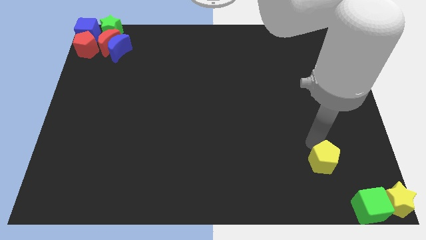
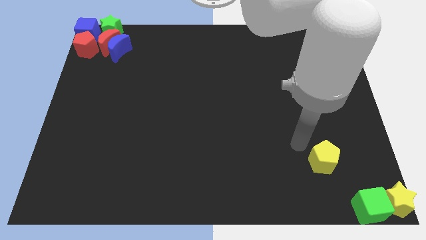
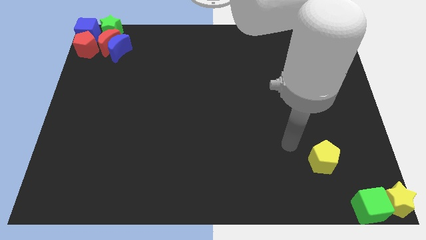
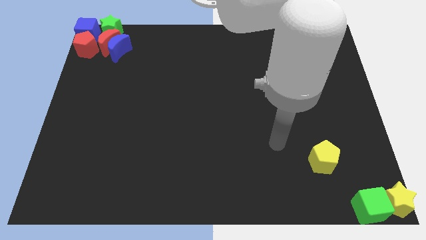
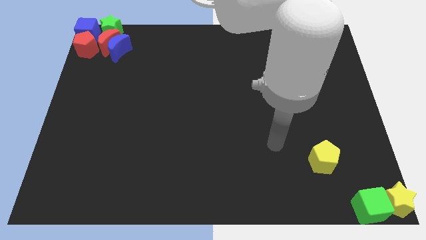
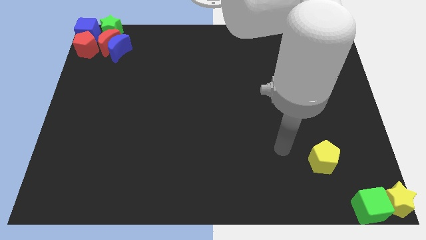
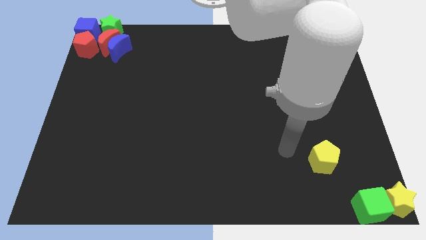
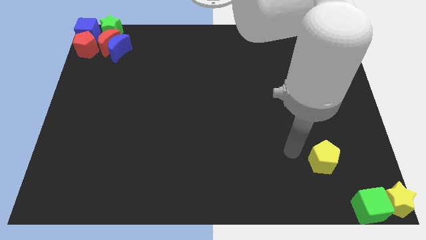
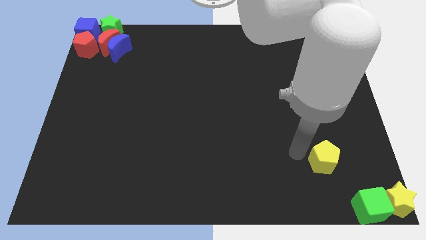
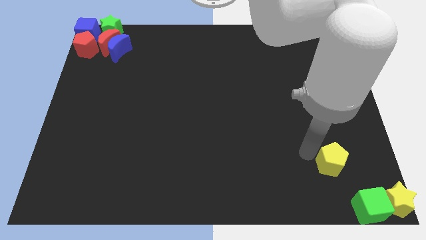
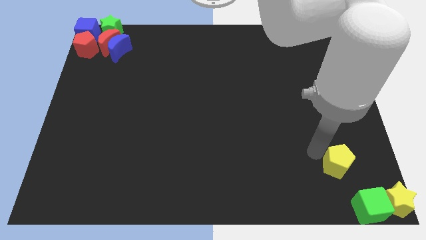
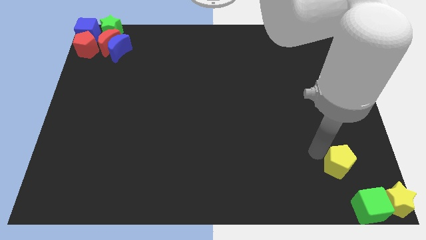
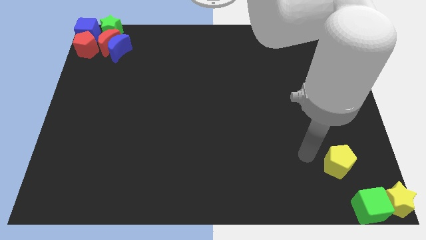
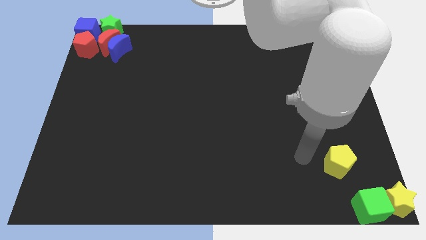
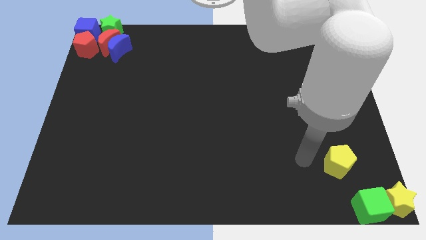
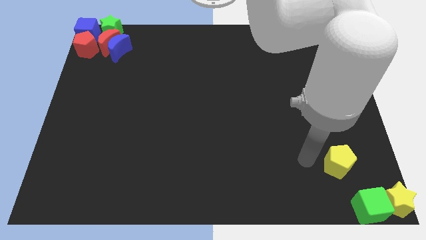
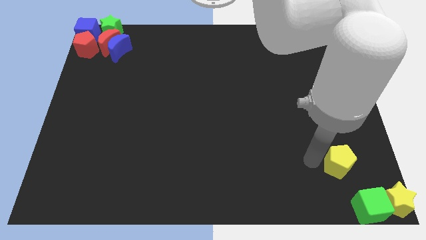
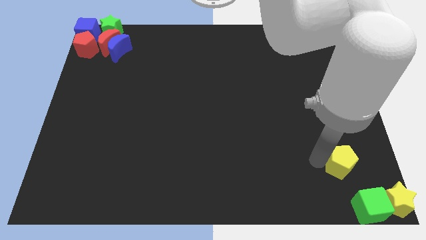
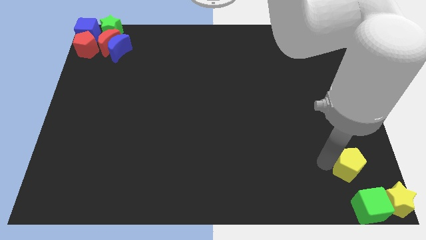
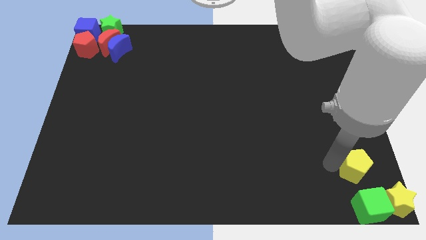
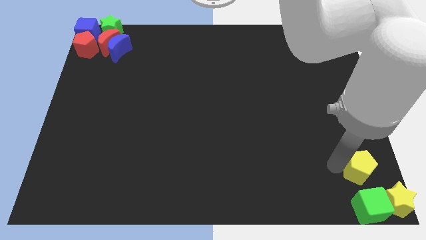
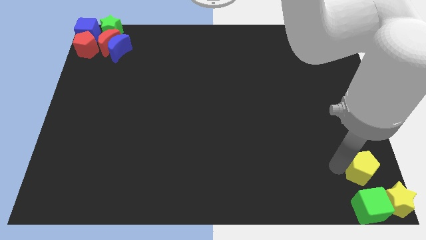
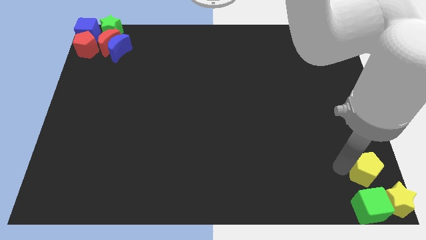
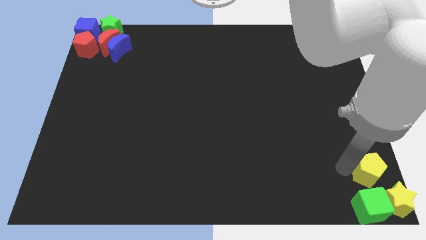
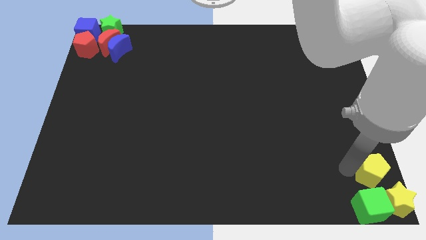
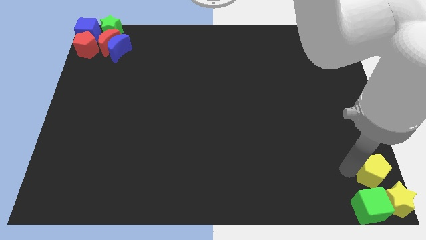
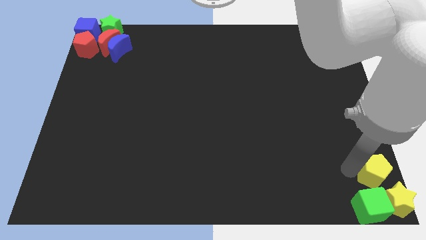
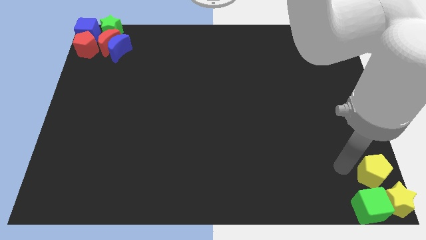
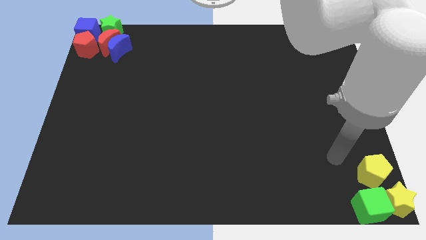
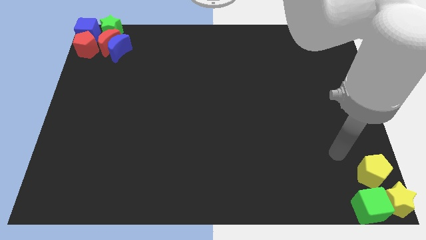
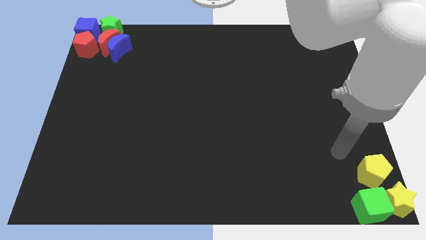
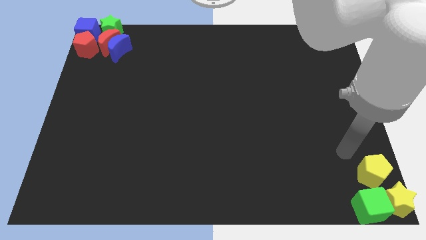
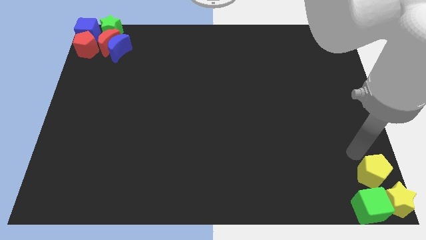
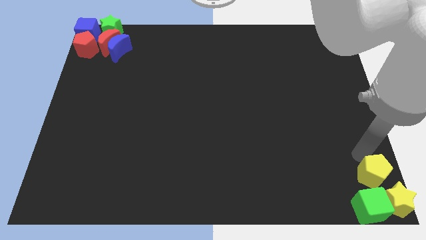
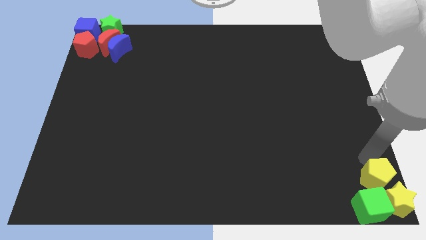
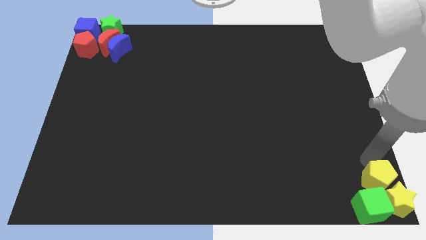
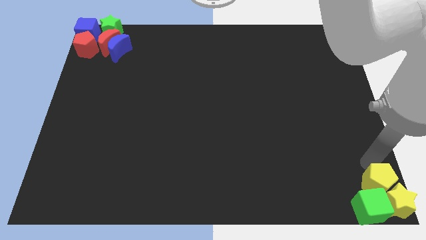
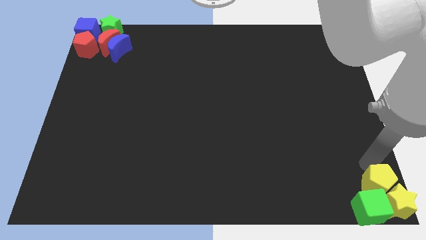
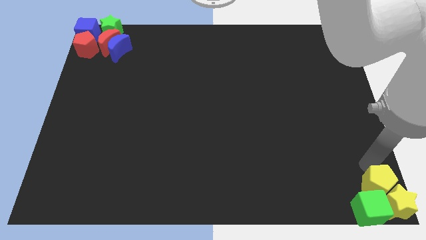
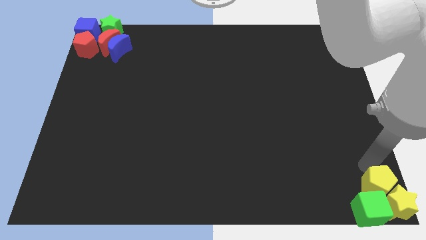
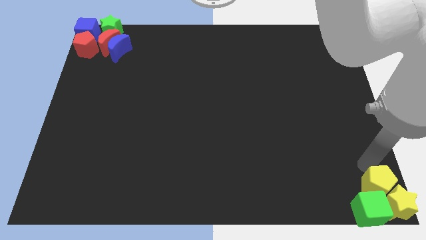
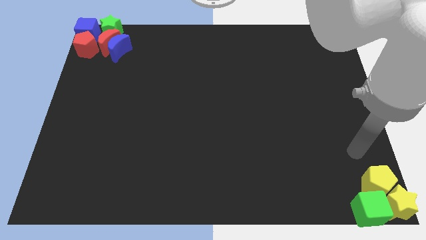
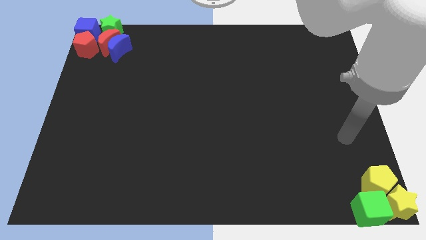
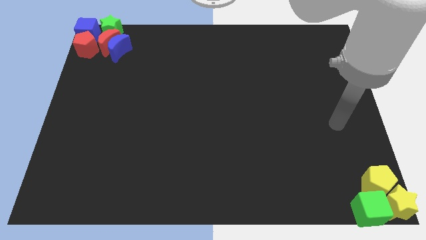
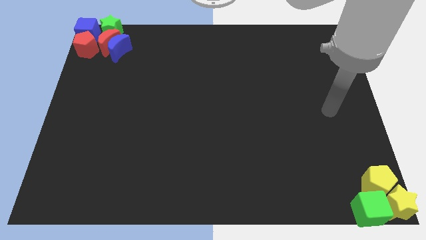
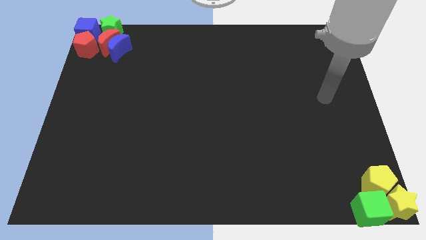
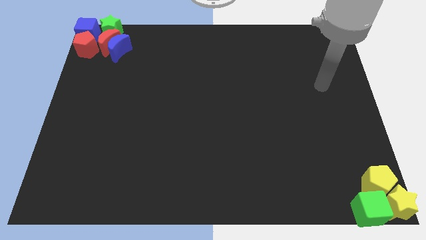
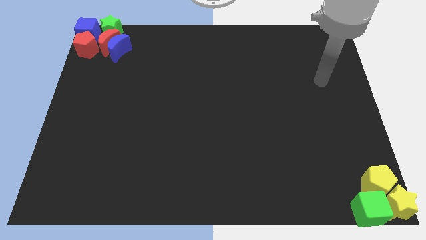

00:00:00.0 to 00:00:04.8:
place the yellow pentagon at the bottom right corner

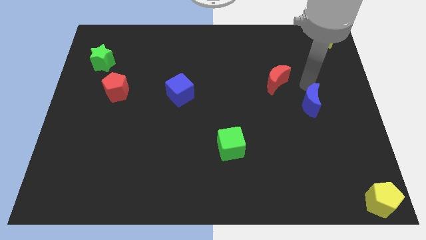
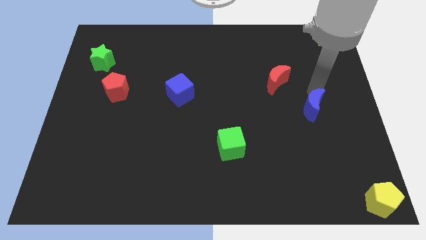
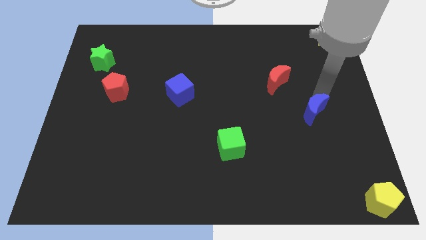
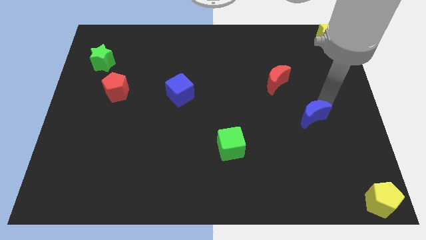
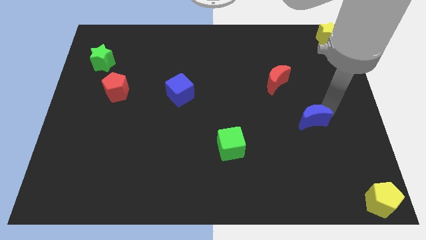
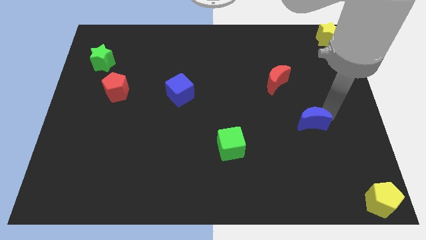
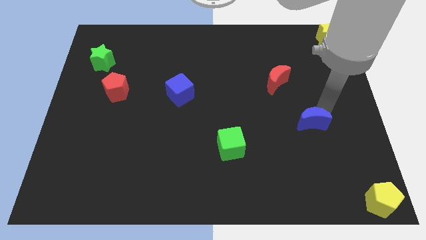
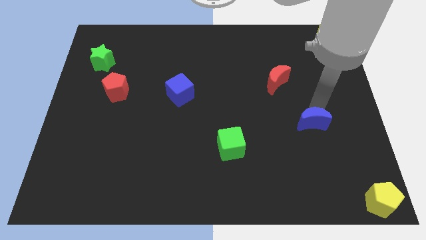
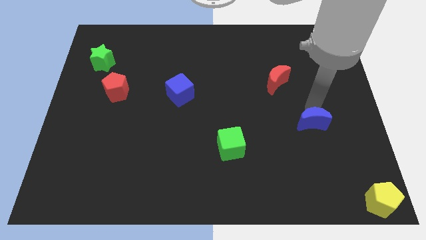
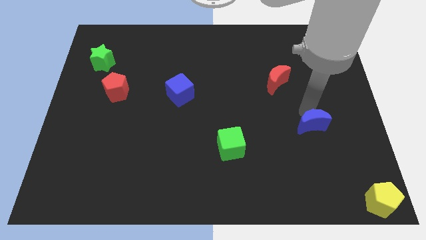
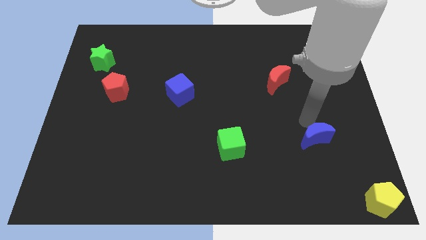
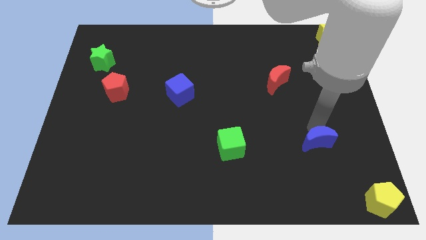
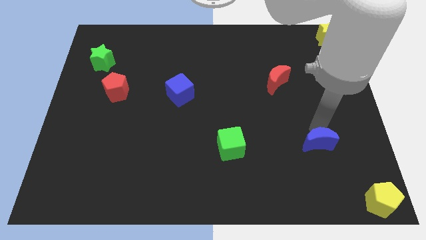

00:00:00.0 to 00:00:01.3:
push the blue crescent horizontal to the green cube

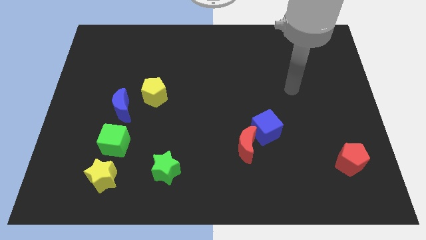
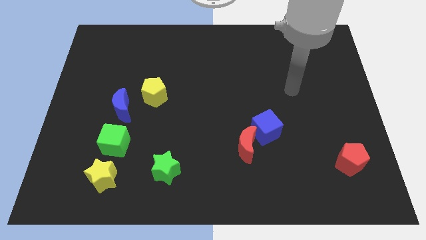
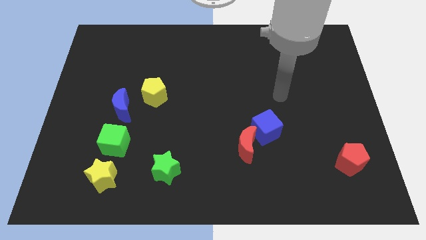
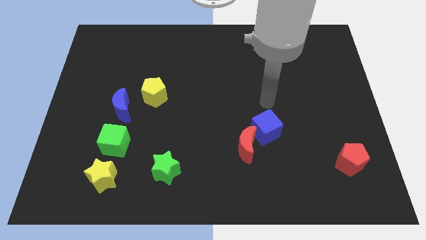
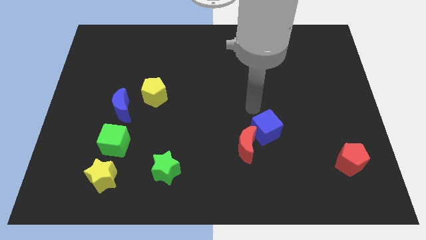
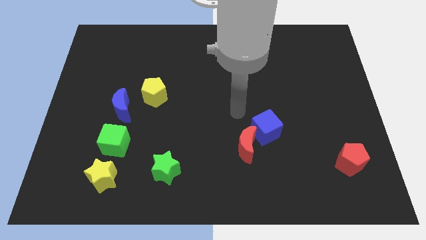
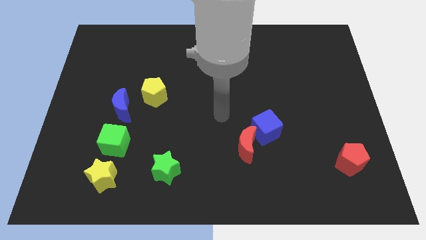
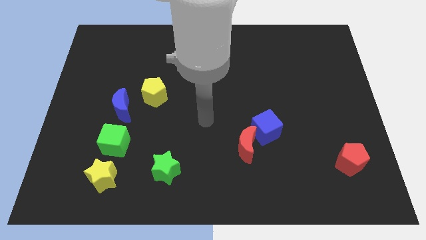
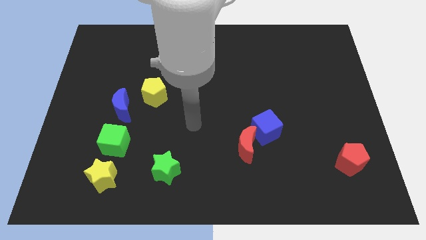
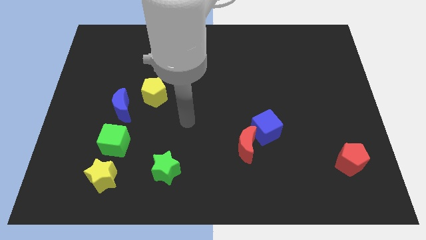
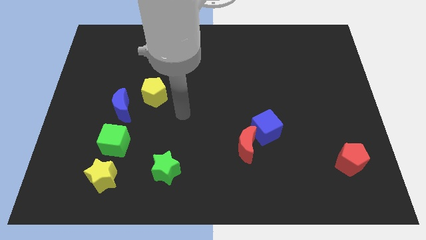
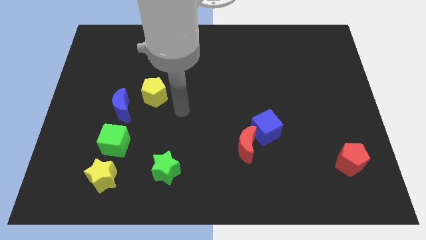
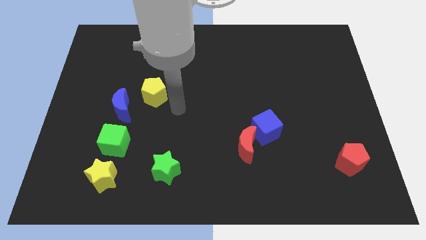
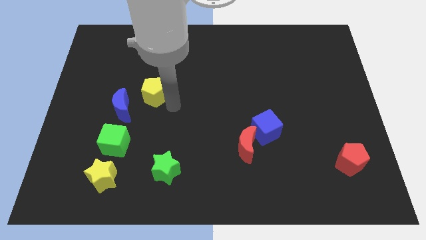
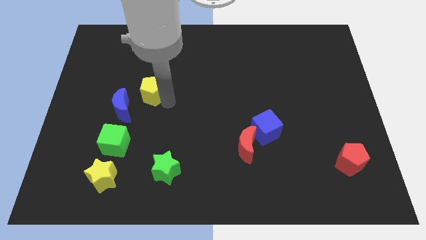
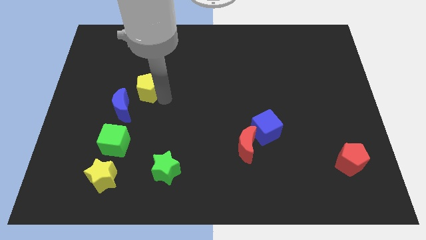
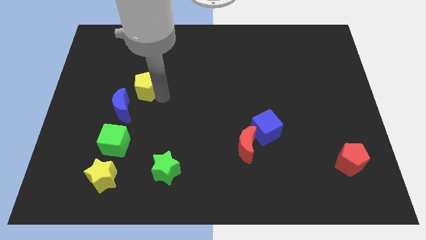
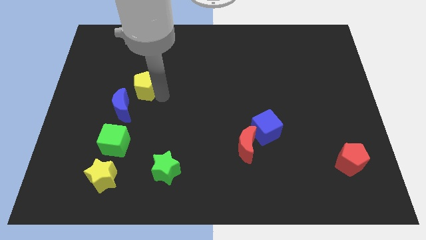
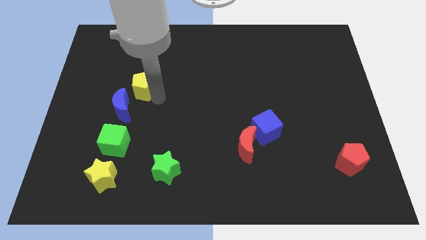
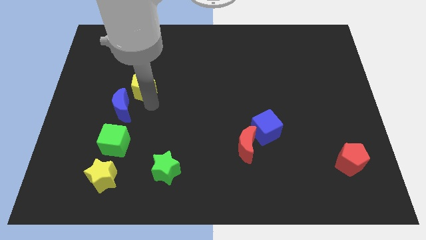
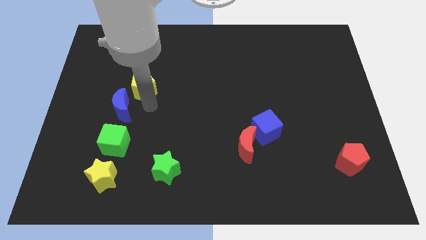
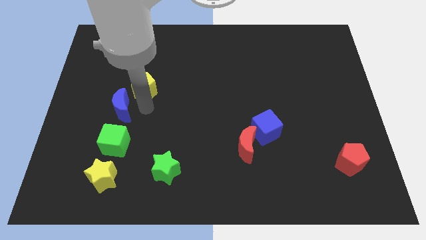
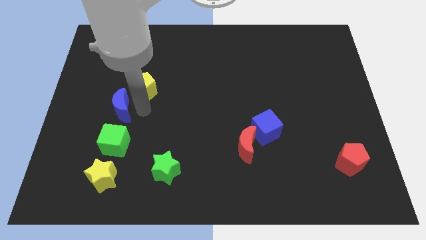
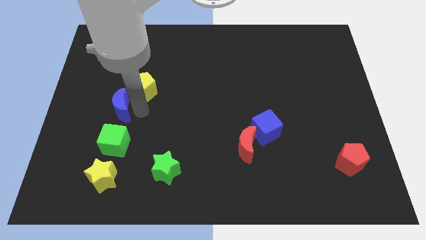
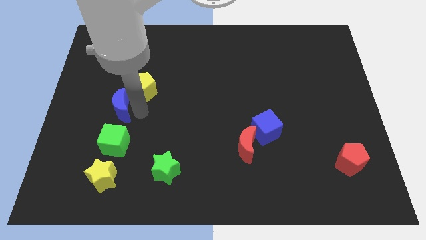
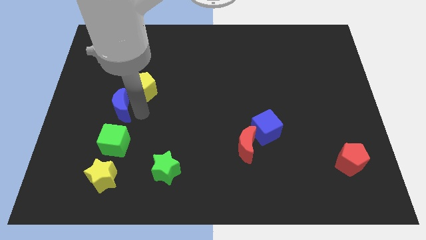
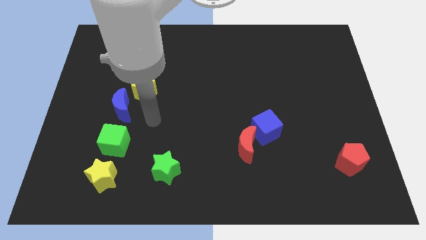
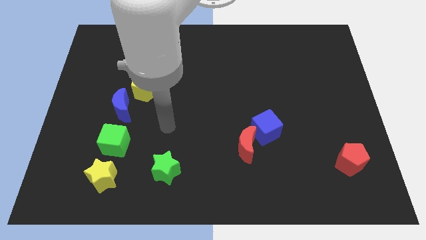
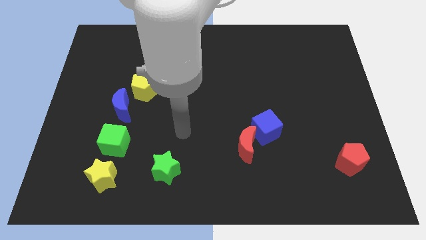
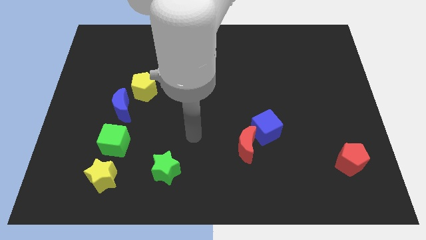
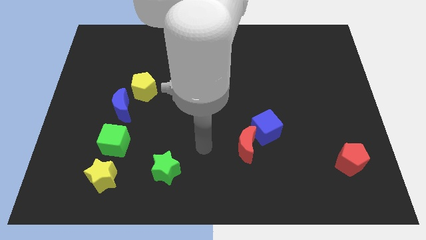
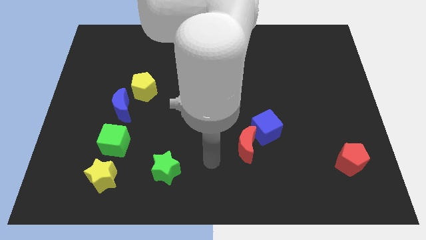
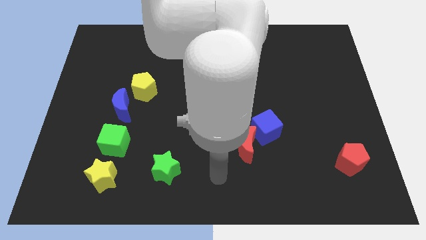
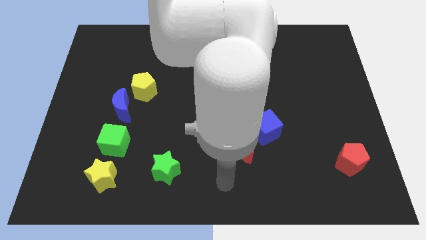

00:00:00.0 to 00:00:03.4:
push the yellow pentagon towards left center
